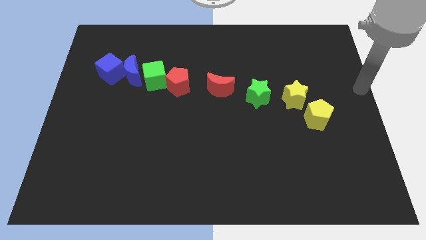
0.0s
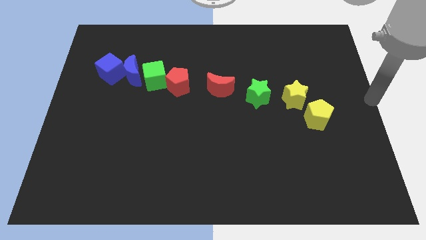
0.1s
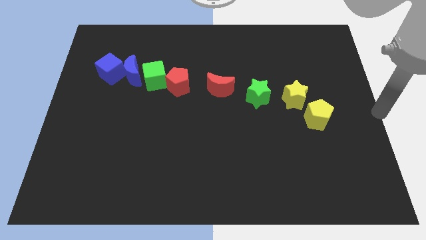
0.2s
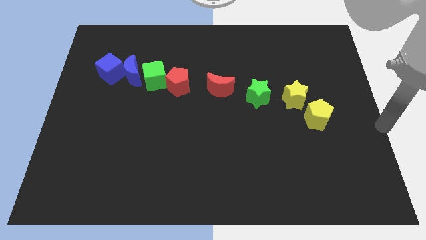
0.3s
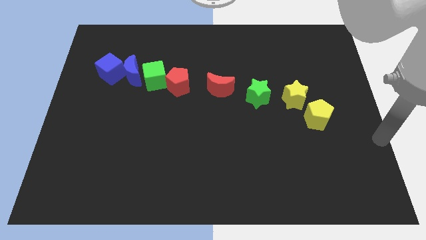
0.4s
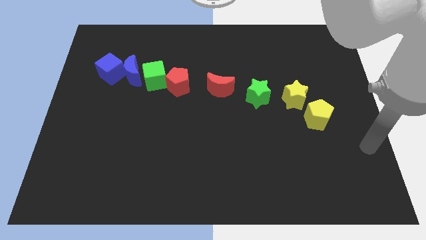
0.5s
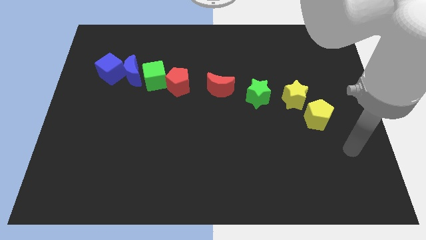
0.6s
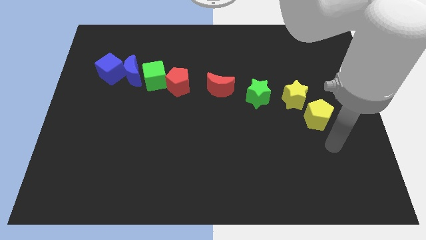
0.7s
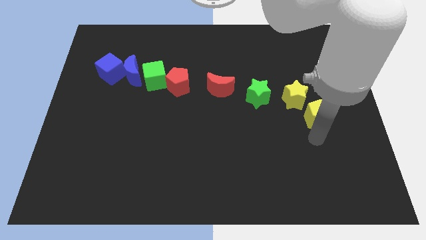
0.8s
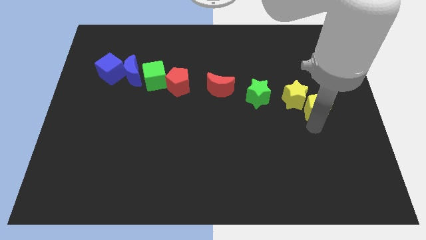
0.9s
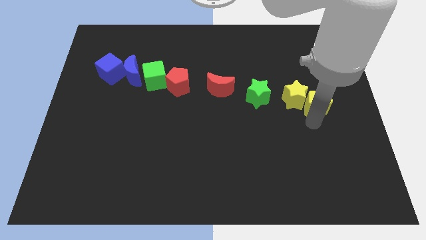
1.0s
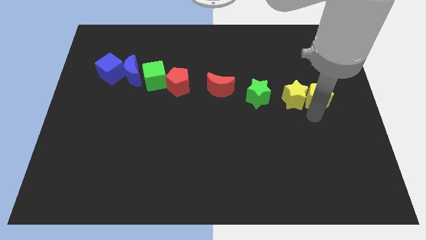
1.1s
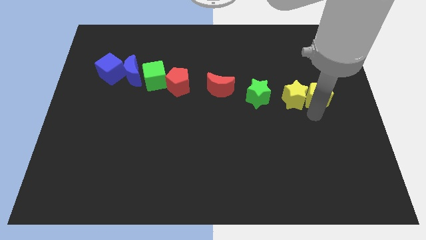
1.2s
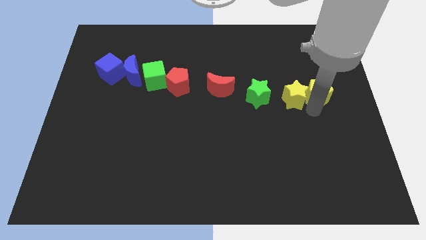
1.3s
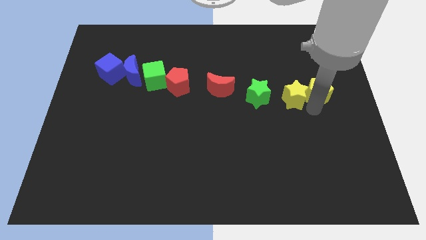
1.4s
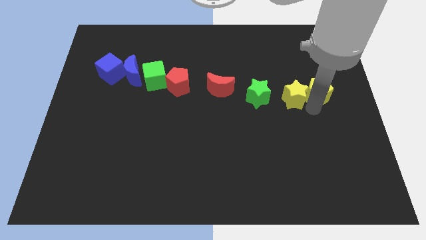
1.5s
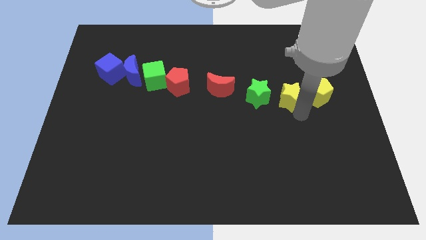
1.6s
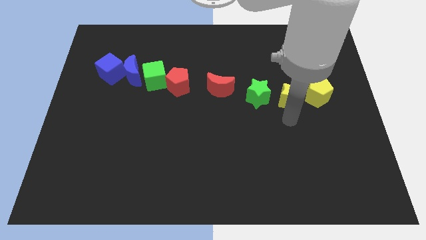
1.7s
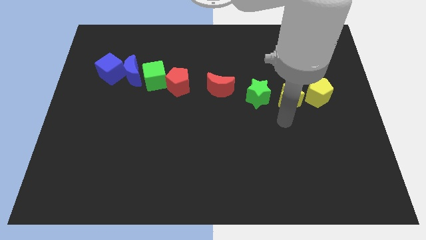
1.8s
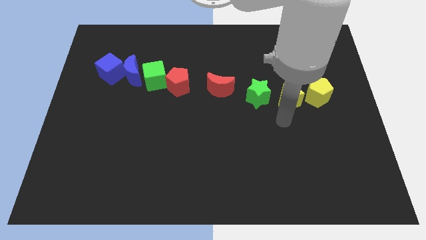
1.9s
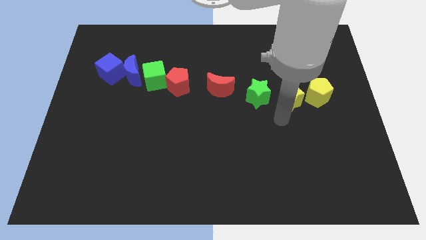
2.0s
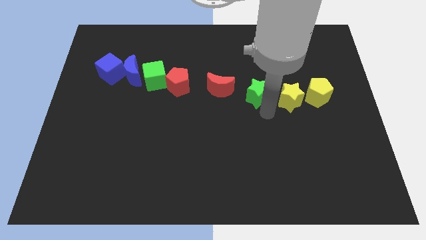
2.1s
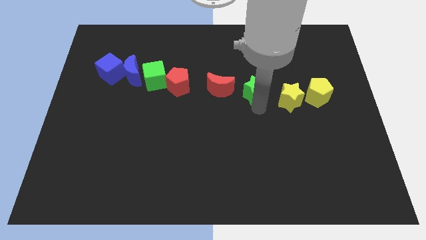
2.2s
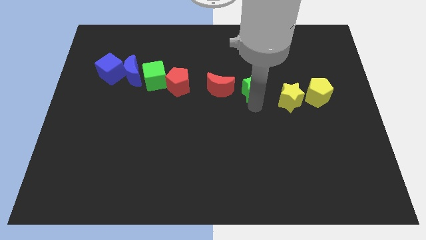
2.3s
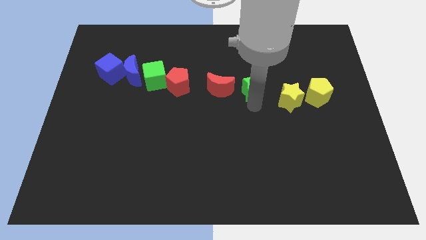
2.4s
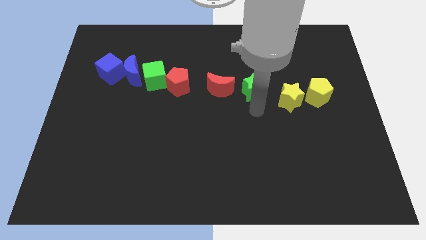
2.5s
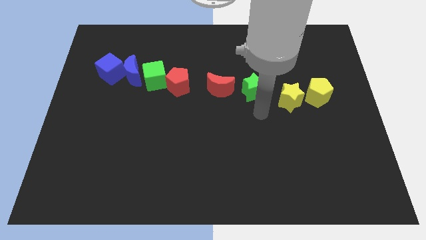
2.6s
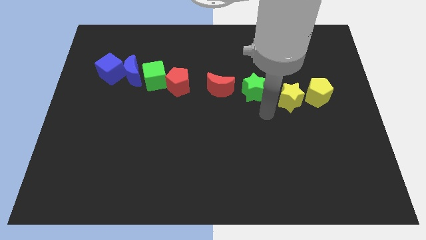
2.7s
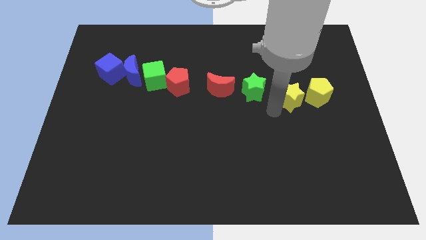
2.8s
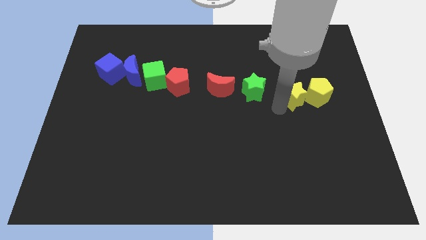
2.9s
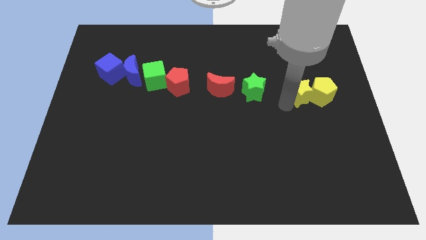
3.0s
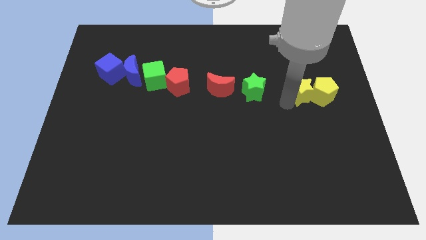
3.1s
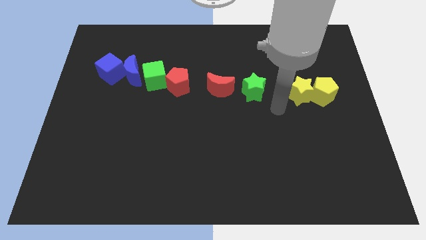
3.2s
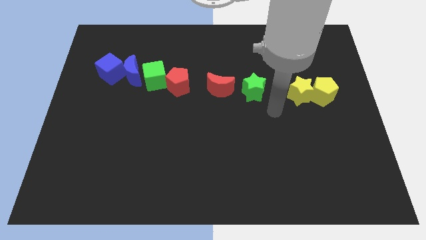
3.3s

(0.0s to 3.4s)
adjust the green star yellow star and yellow pentagon at the right side of the red crescent

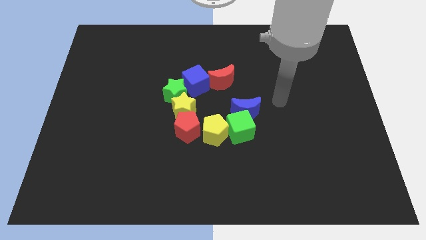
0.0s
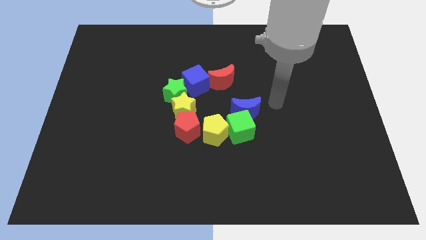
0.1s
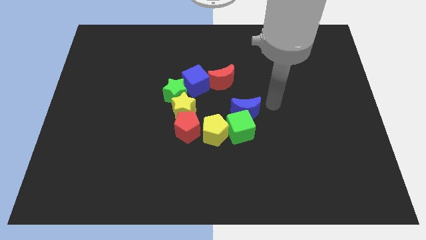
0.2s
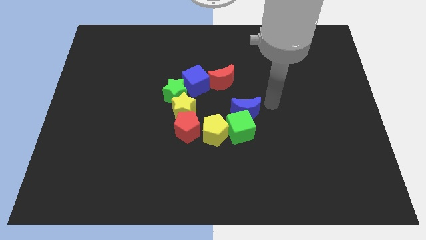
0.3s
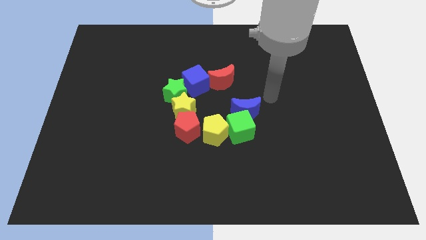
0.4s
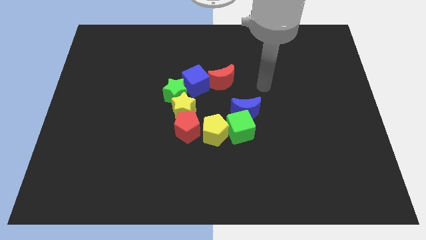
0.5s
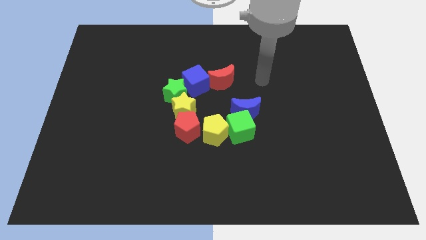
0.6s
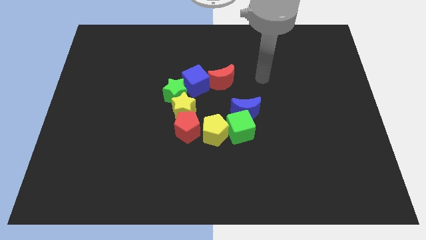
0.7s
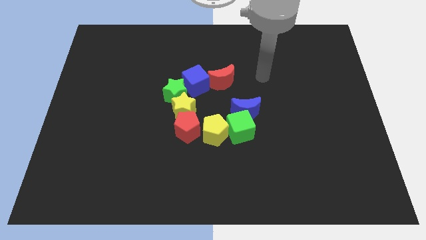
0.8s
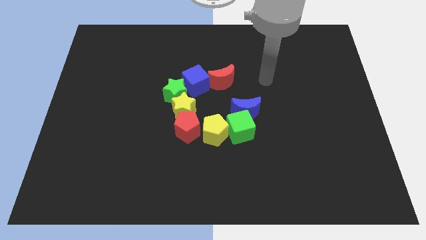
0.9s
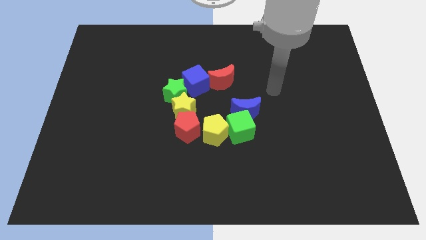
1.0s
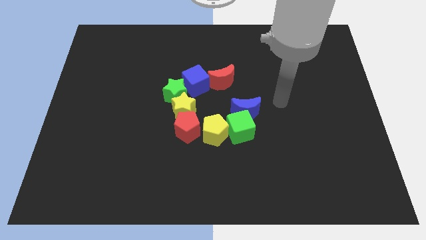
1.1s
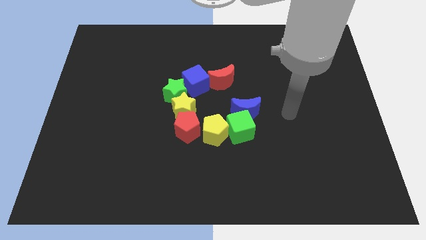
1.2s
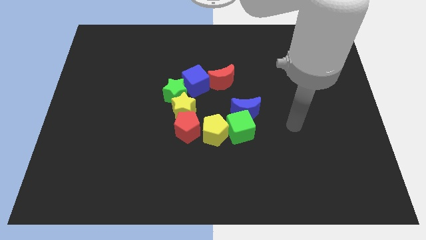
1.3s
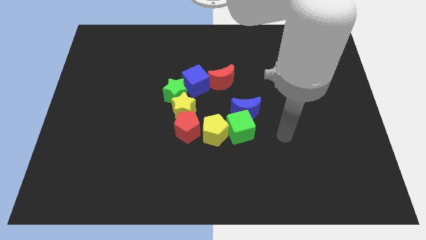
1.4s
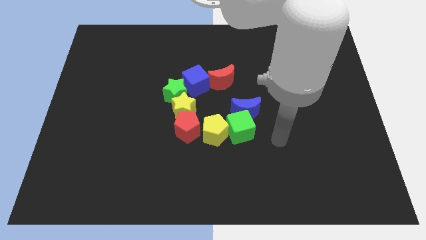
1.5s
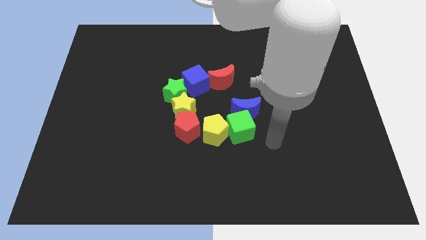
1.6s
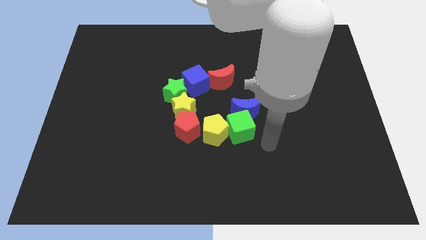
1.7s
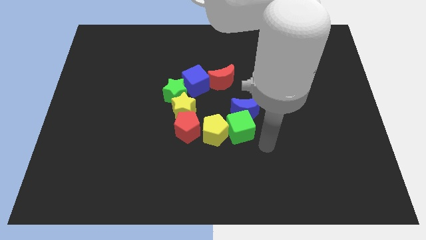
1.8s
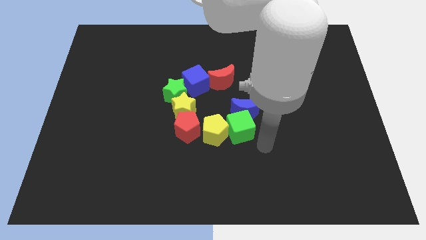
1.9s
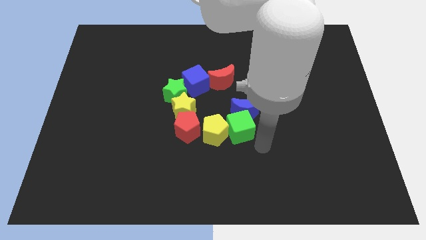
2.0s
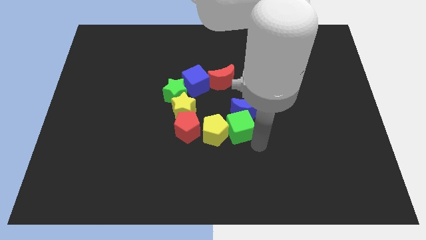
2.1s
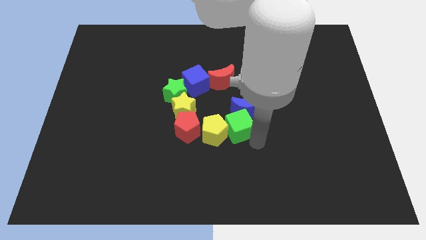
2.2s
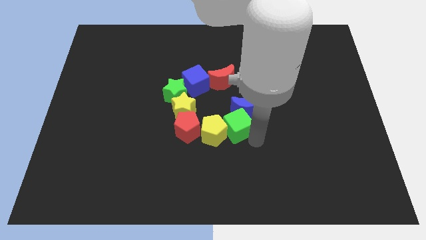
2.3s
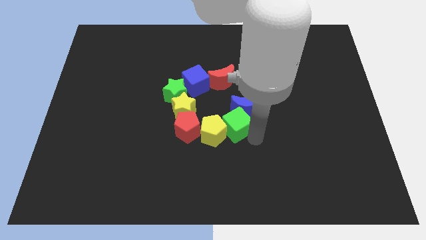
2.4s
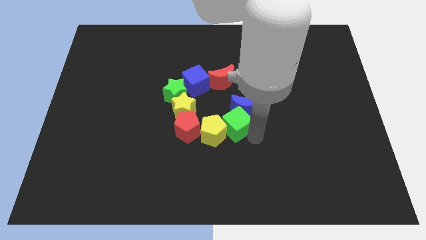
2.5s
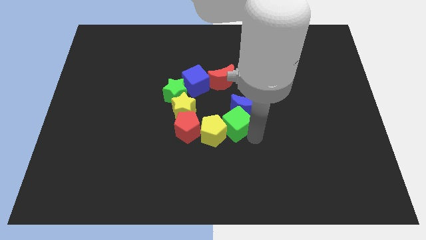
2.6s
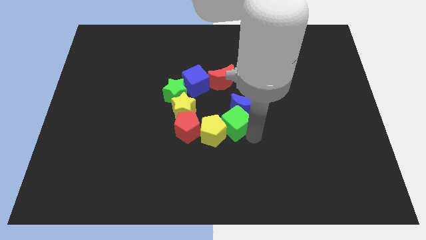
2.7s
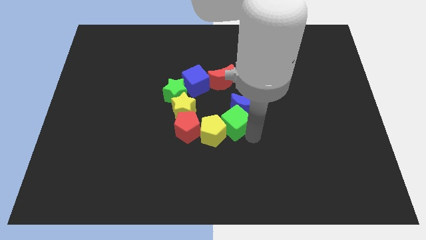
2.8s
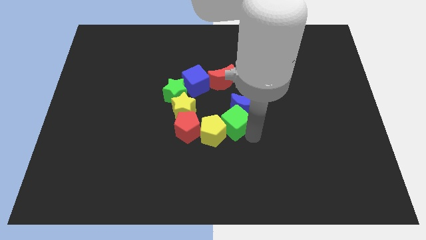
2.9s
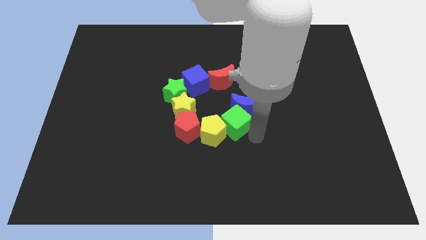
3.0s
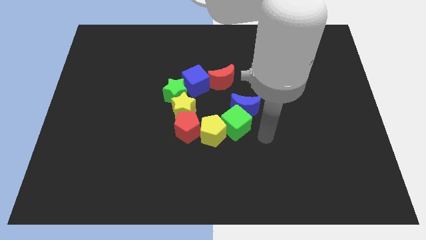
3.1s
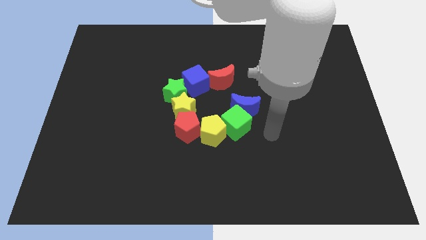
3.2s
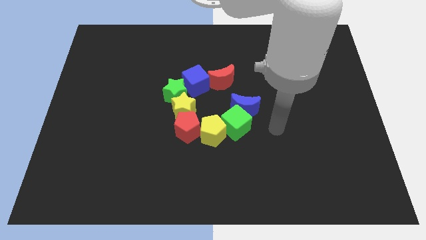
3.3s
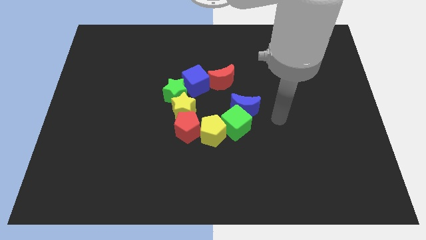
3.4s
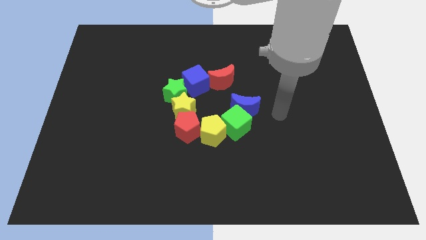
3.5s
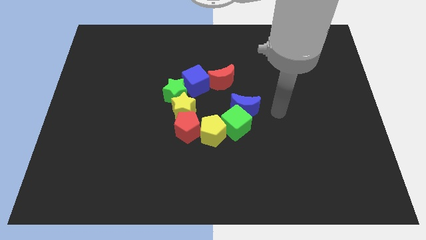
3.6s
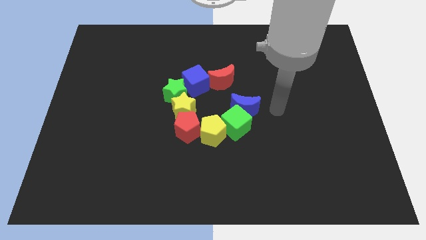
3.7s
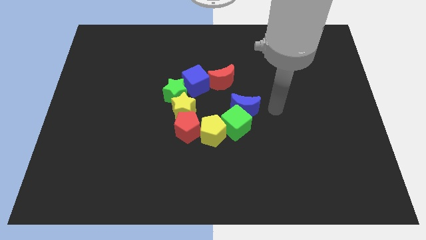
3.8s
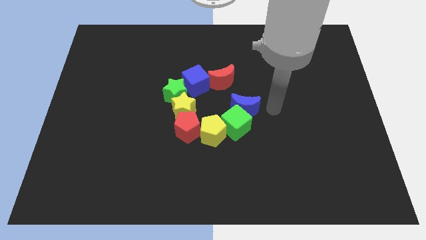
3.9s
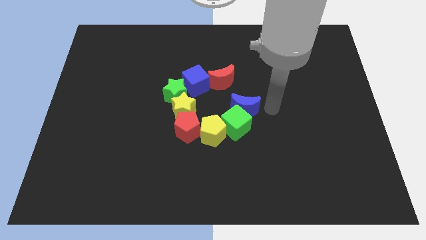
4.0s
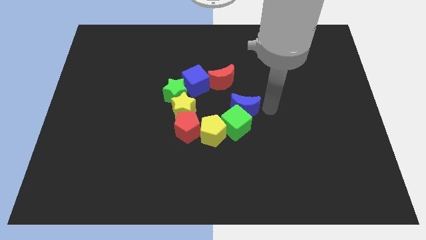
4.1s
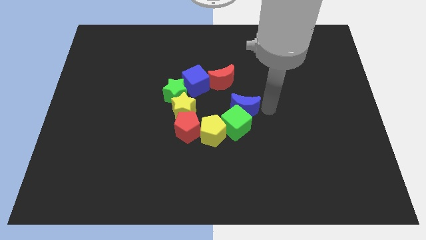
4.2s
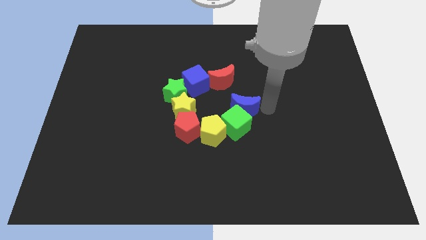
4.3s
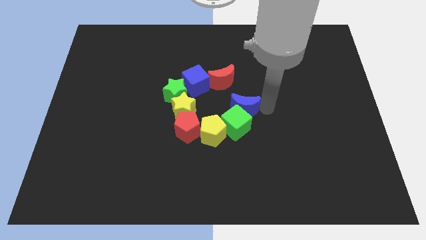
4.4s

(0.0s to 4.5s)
move green cube slightly to the top

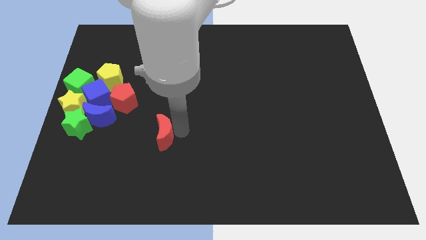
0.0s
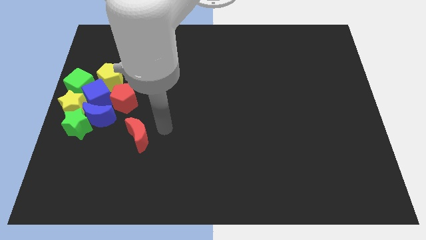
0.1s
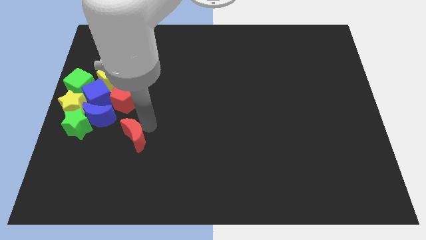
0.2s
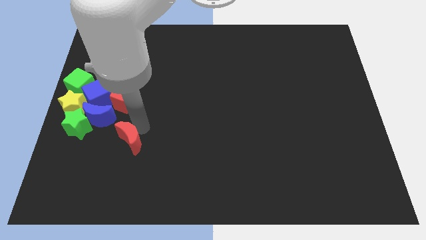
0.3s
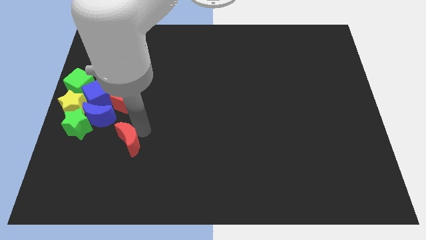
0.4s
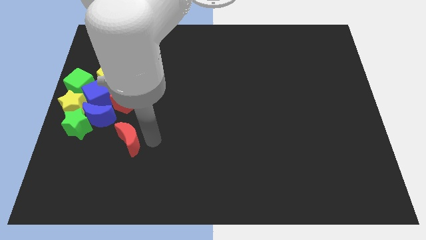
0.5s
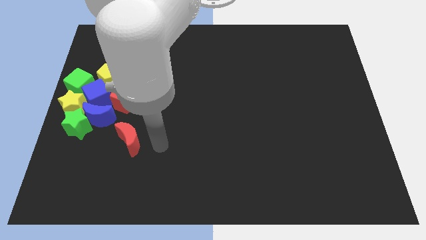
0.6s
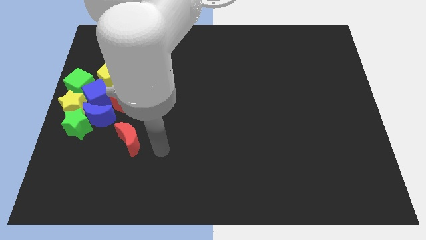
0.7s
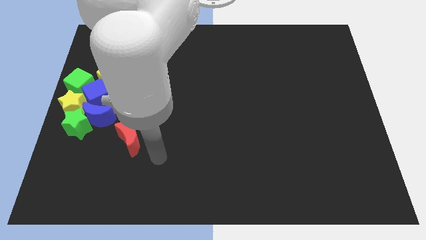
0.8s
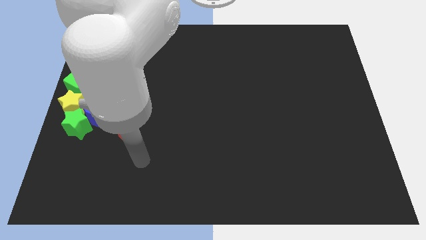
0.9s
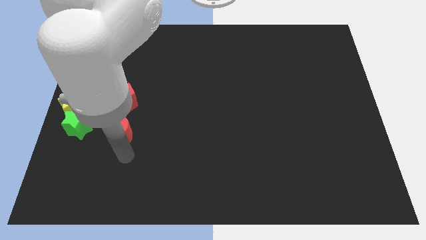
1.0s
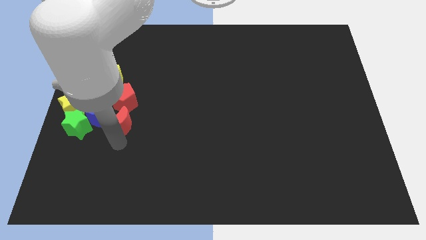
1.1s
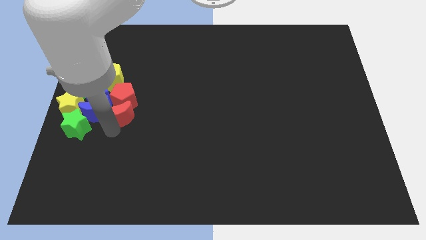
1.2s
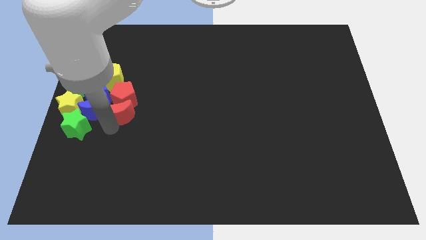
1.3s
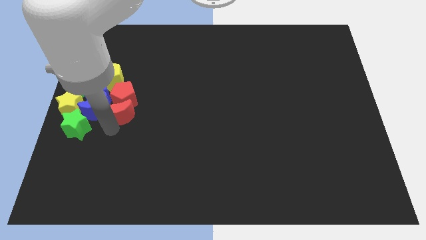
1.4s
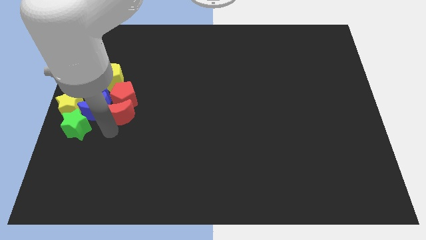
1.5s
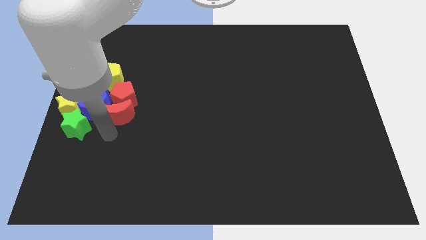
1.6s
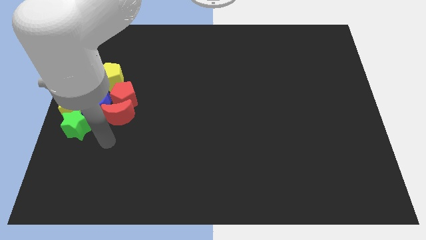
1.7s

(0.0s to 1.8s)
push the red moon into the group right to the blue cube
